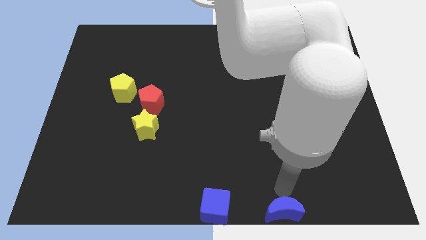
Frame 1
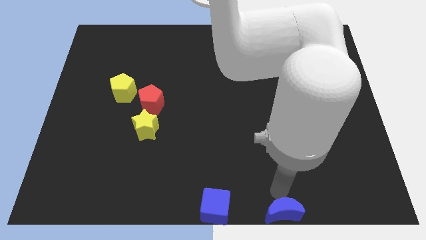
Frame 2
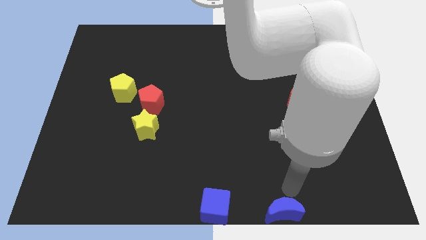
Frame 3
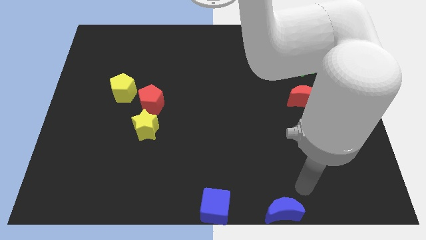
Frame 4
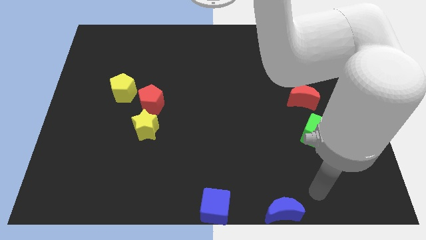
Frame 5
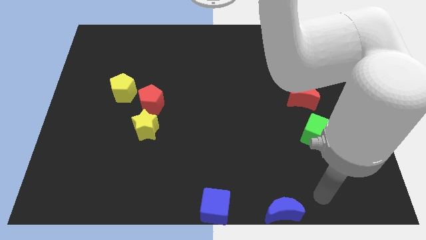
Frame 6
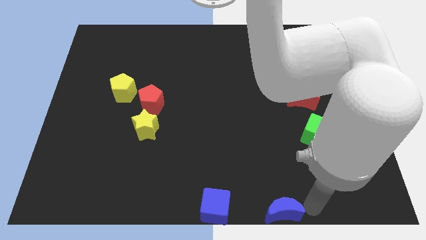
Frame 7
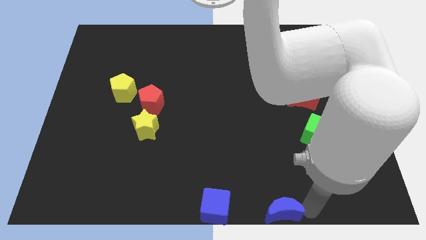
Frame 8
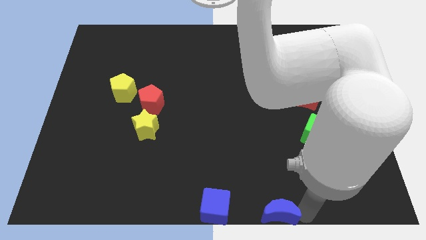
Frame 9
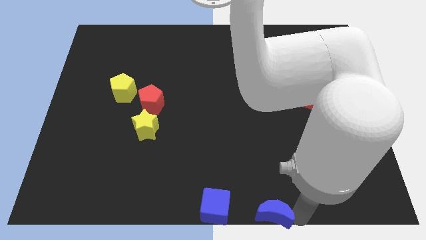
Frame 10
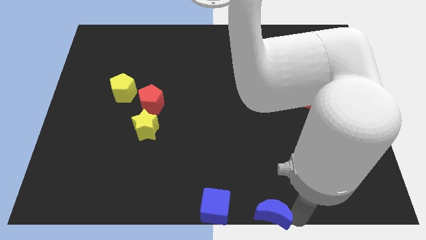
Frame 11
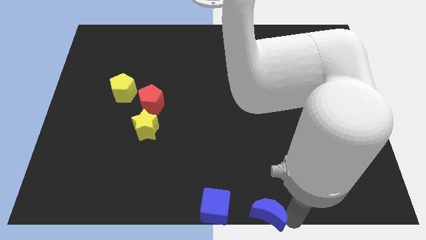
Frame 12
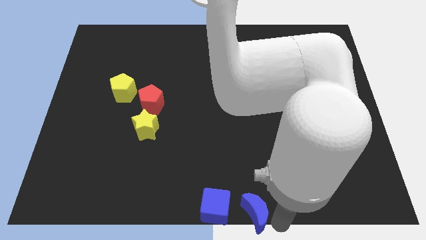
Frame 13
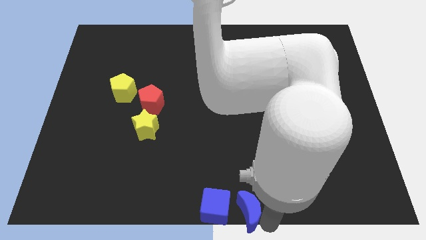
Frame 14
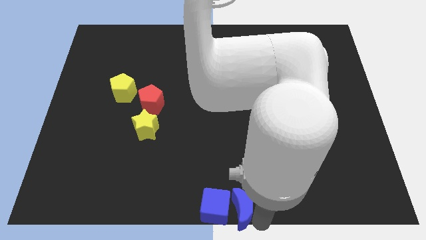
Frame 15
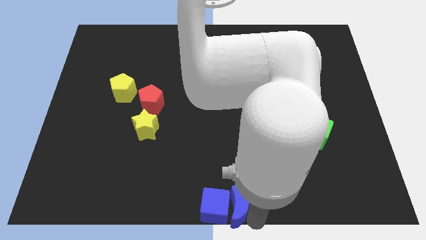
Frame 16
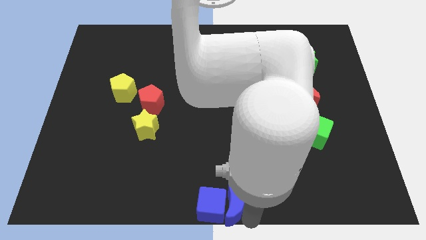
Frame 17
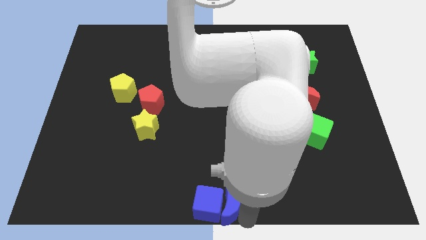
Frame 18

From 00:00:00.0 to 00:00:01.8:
push the blue crescent into the blue cube

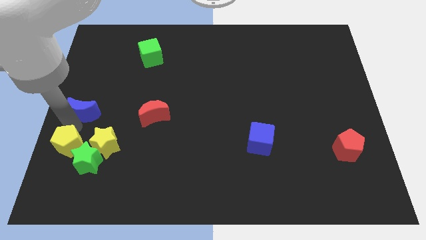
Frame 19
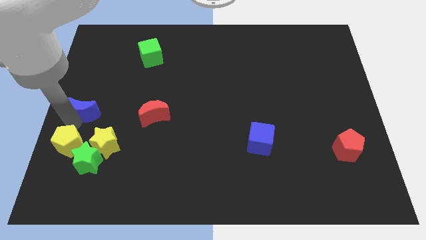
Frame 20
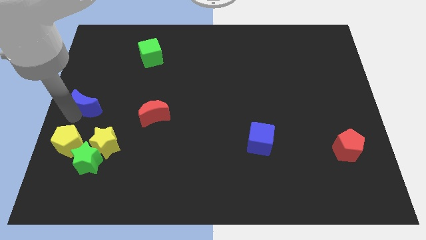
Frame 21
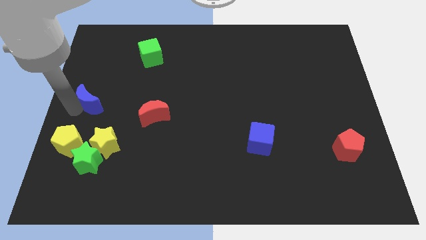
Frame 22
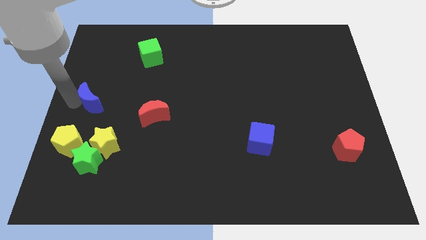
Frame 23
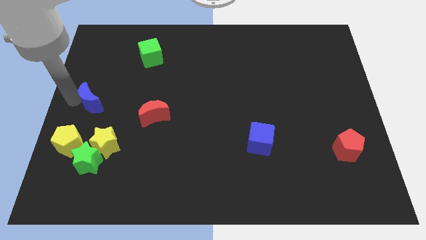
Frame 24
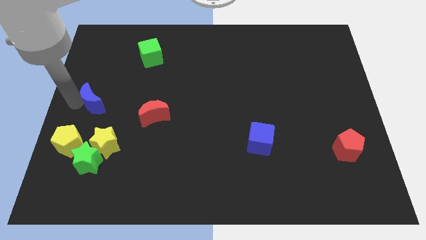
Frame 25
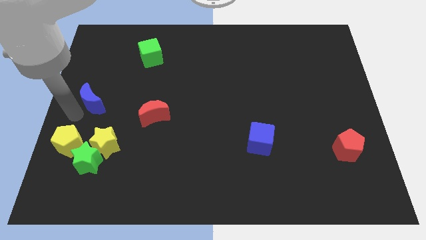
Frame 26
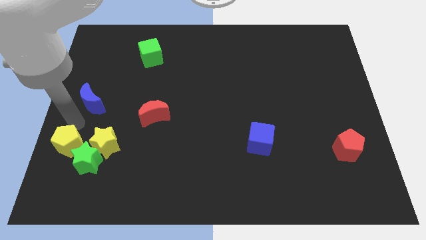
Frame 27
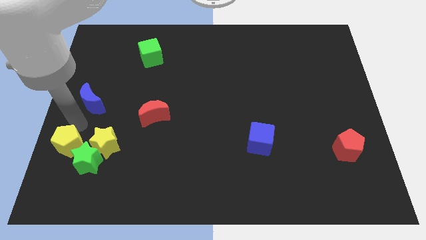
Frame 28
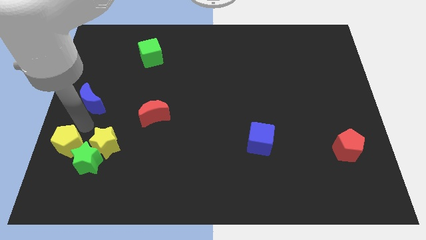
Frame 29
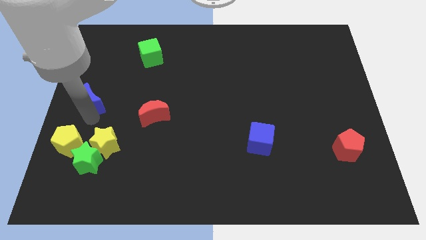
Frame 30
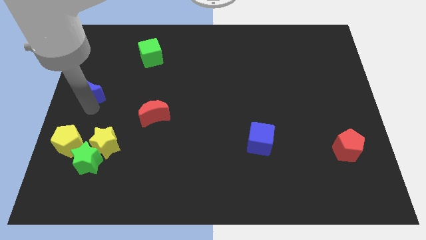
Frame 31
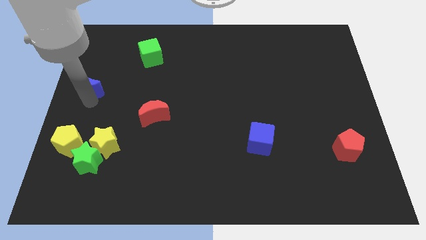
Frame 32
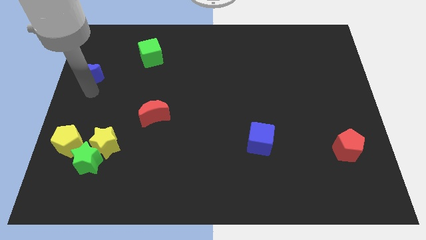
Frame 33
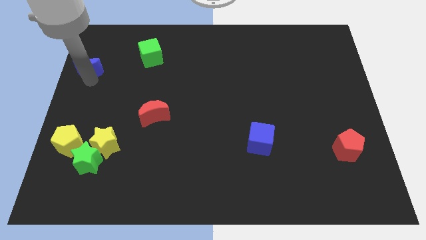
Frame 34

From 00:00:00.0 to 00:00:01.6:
push the blue crescent to the left of the green cube

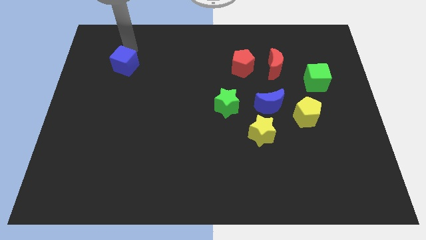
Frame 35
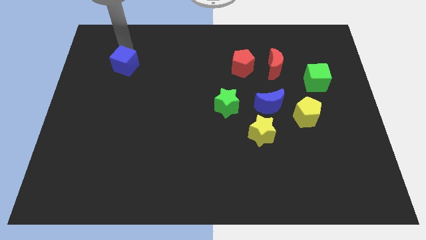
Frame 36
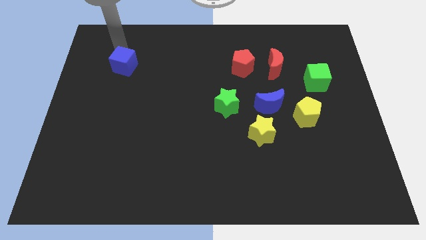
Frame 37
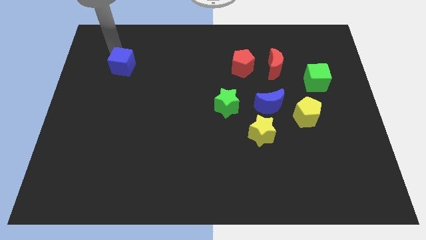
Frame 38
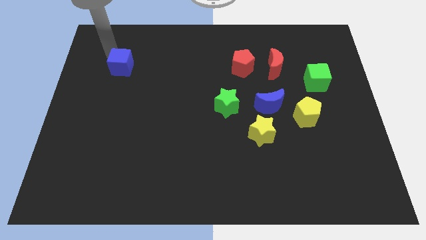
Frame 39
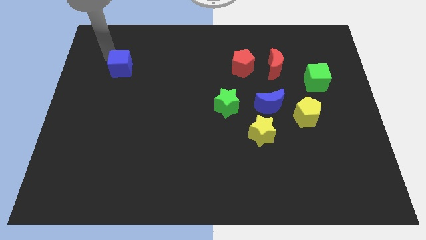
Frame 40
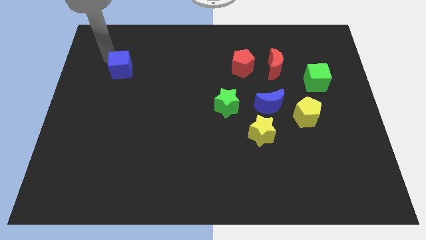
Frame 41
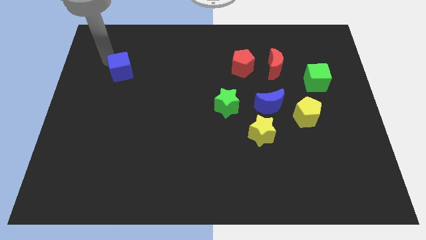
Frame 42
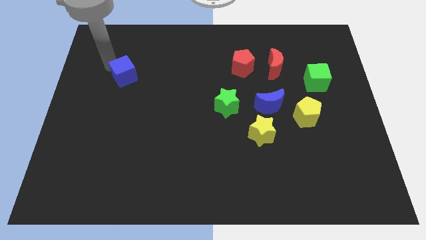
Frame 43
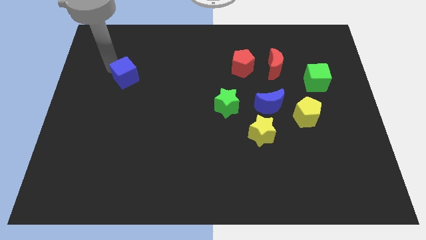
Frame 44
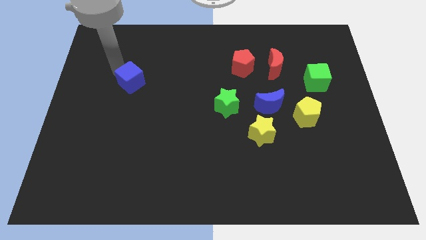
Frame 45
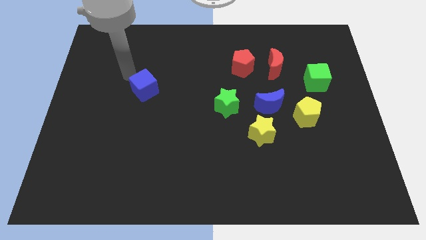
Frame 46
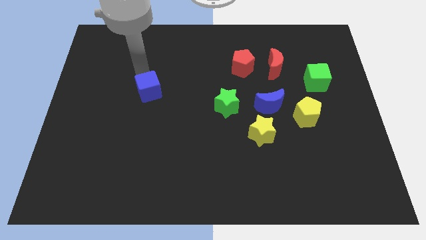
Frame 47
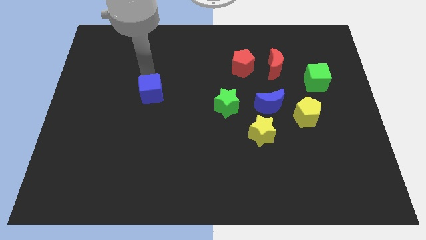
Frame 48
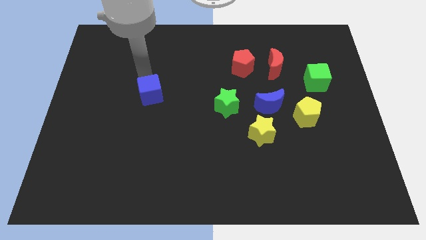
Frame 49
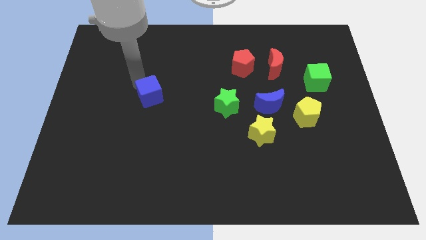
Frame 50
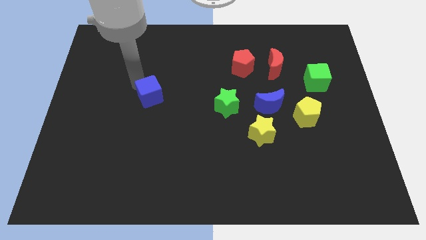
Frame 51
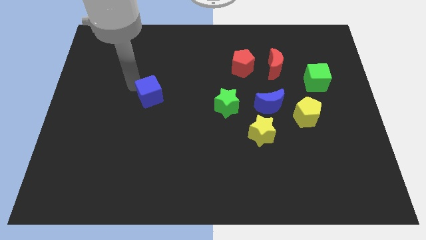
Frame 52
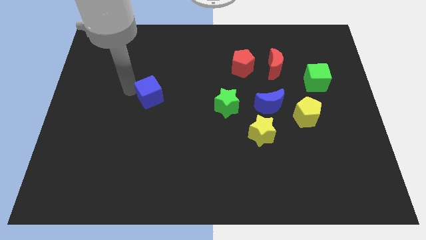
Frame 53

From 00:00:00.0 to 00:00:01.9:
push the blue cube towards the bottom of the board

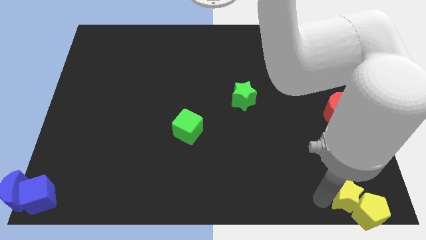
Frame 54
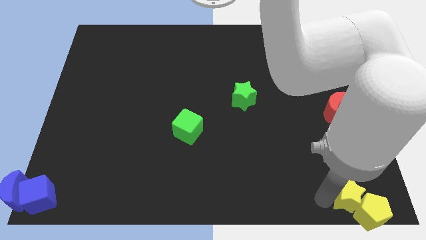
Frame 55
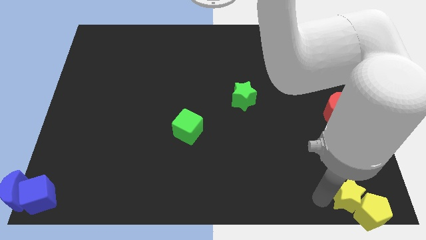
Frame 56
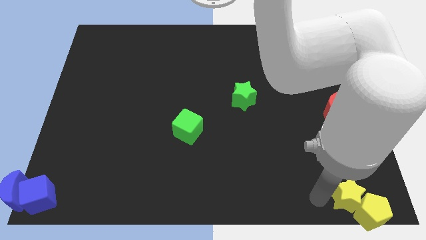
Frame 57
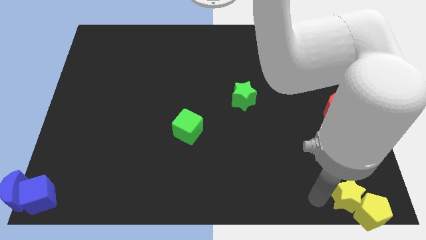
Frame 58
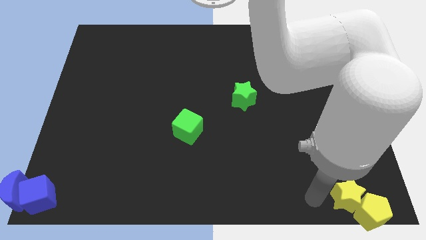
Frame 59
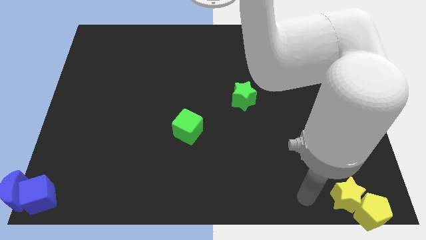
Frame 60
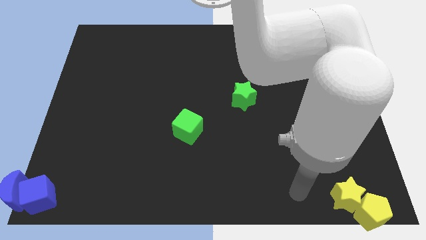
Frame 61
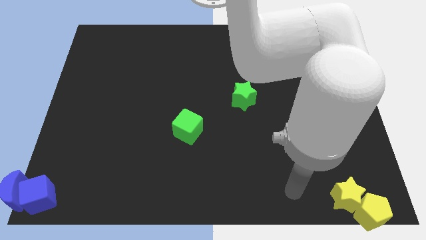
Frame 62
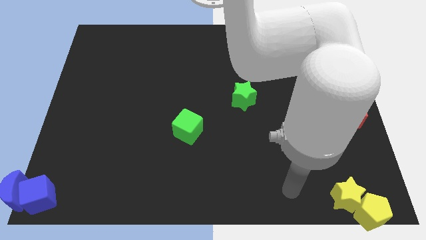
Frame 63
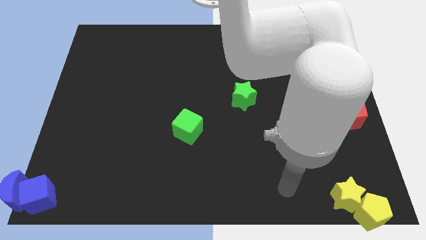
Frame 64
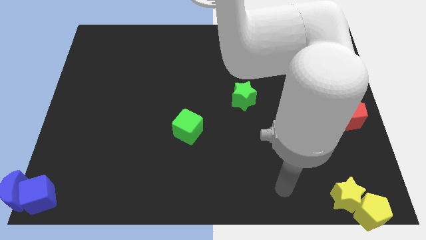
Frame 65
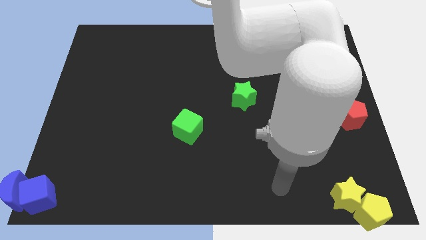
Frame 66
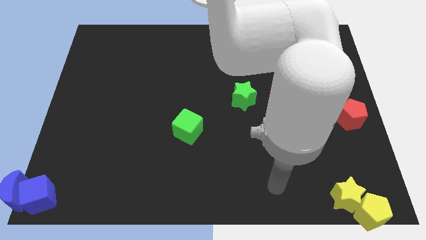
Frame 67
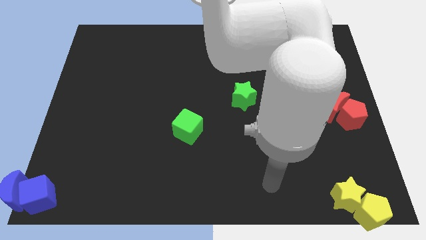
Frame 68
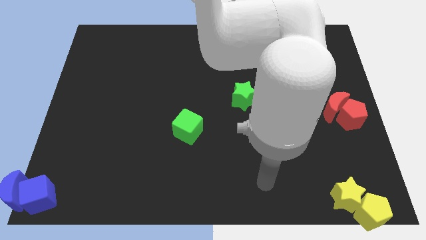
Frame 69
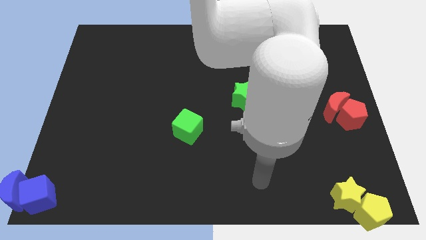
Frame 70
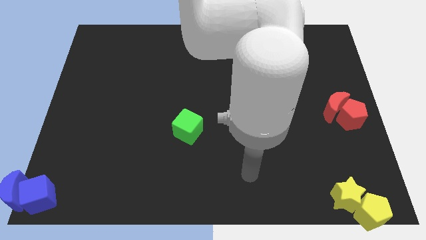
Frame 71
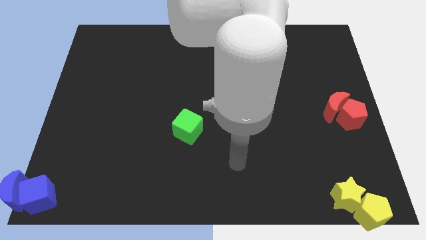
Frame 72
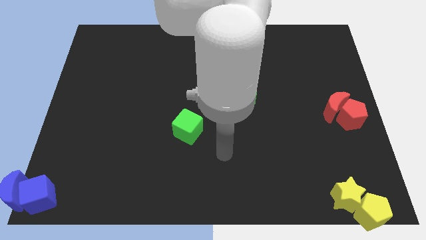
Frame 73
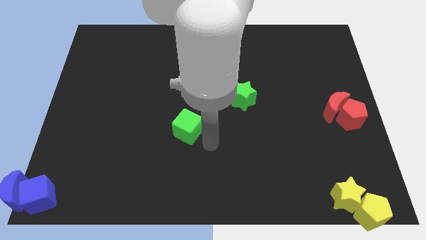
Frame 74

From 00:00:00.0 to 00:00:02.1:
move your arm away from the yellow star

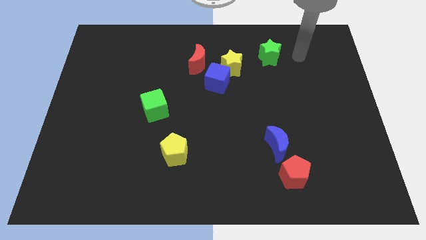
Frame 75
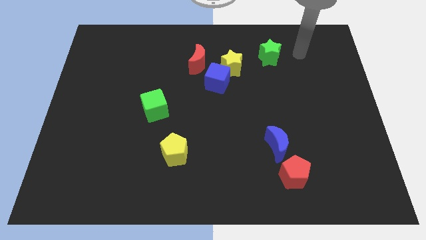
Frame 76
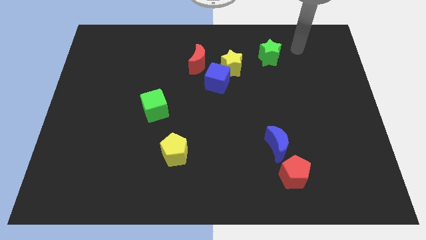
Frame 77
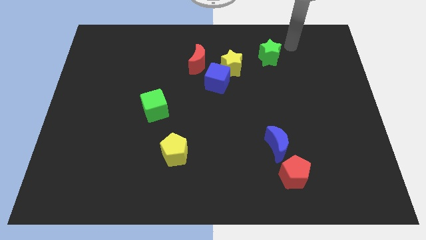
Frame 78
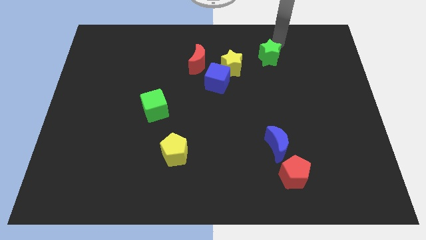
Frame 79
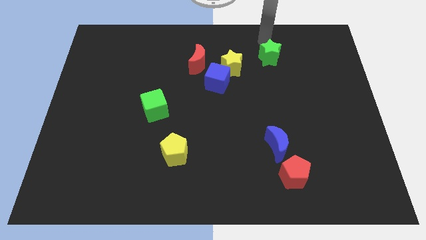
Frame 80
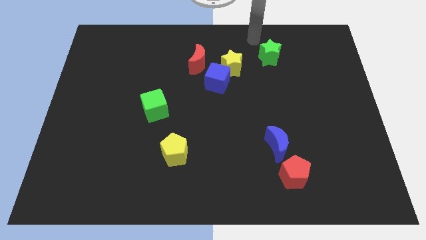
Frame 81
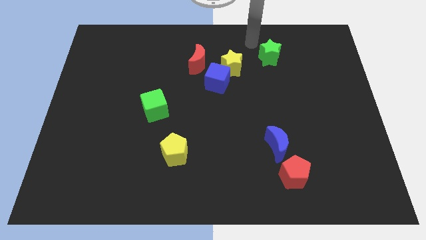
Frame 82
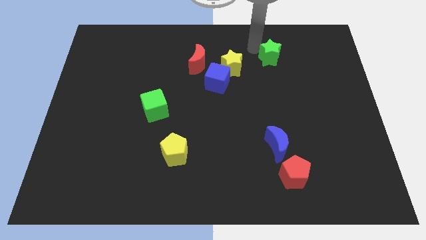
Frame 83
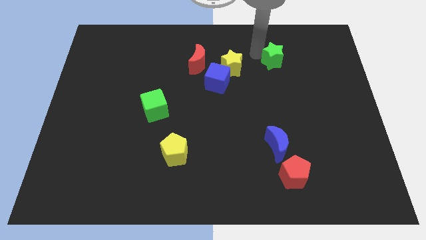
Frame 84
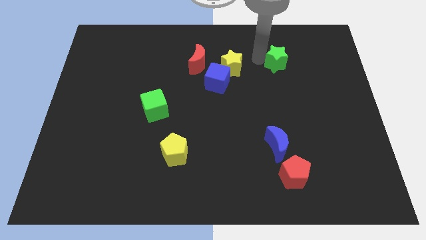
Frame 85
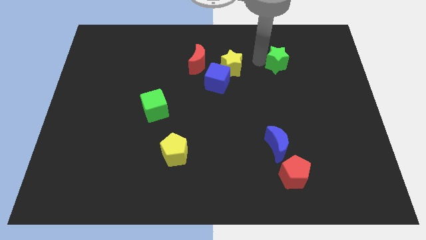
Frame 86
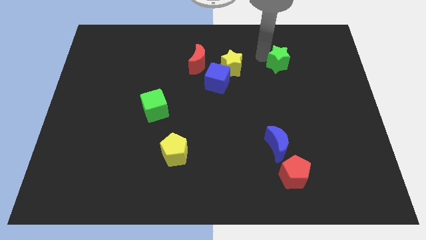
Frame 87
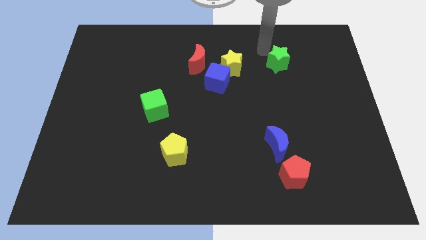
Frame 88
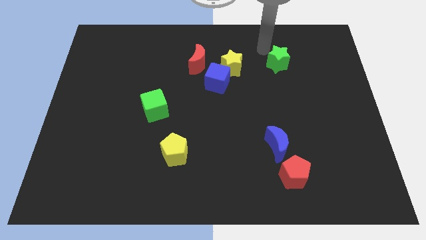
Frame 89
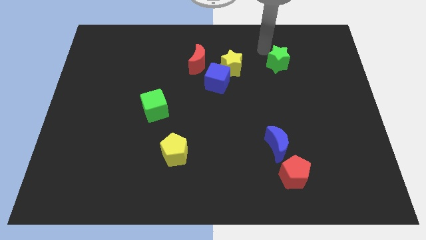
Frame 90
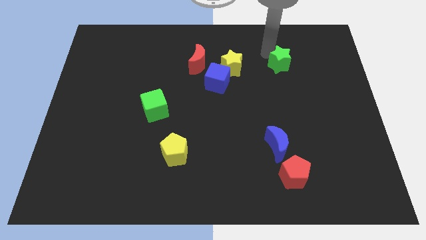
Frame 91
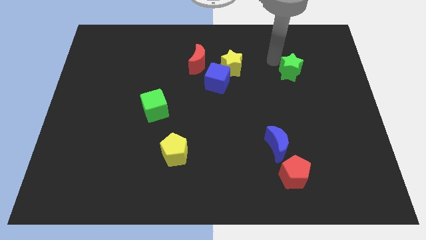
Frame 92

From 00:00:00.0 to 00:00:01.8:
push the green star slightly to the bottom
